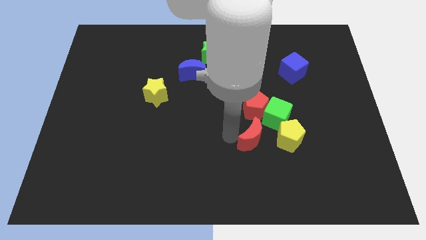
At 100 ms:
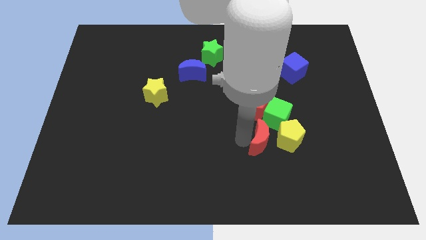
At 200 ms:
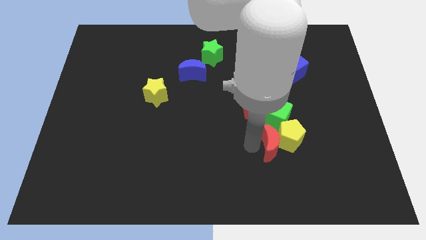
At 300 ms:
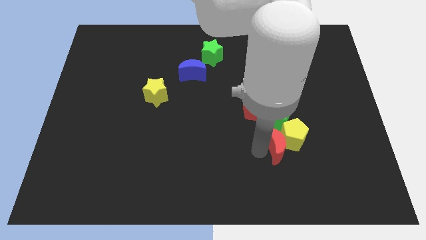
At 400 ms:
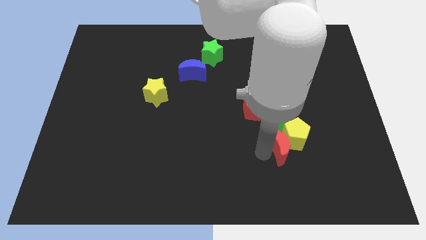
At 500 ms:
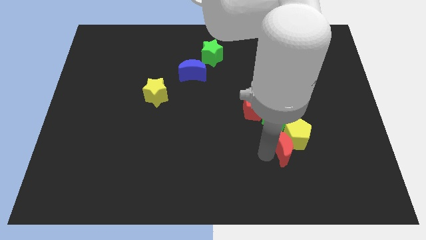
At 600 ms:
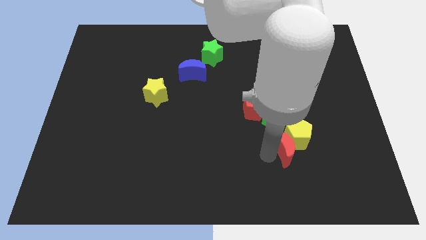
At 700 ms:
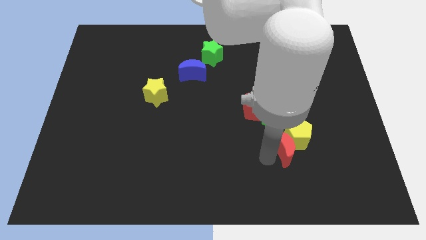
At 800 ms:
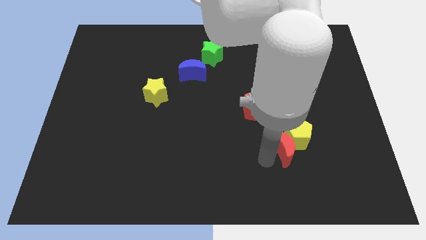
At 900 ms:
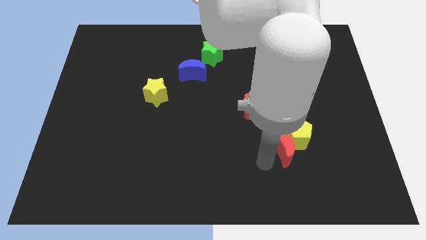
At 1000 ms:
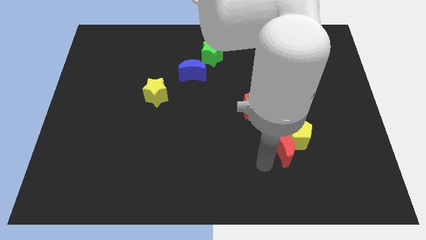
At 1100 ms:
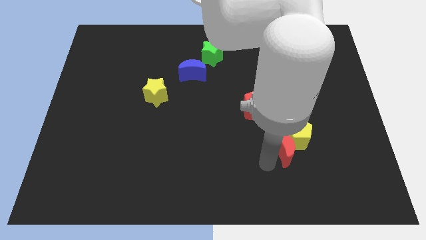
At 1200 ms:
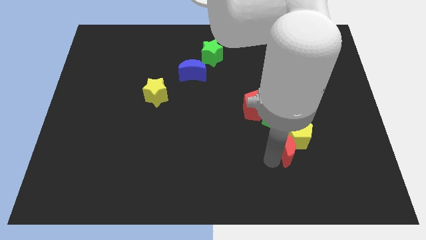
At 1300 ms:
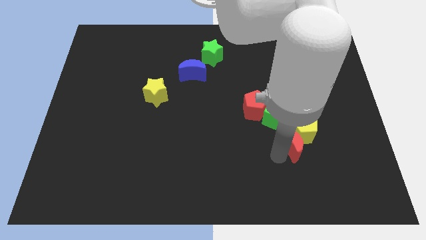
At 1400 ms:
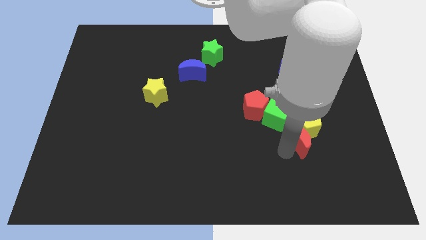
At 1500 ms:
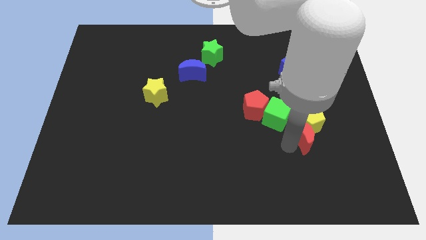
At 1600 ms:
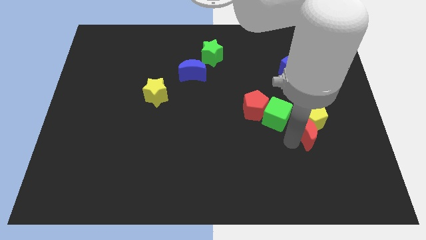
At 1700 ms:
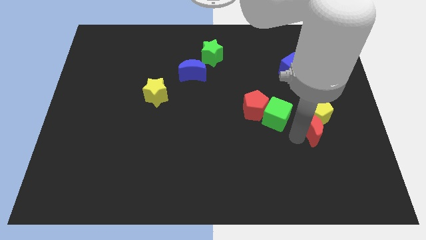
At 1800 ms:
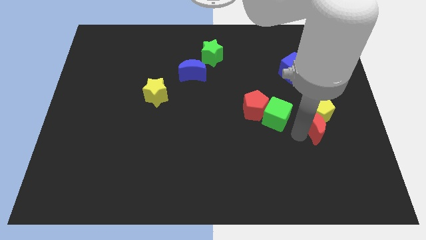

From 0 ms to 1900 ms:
push the yellow pentagon with the help of the red crescent towards the right center of the board

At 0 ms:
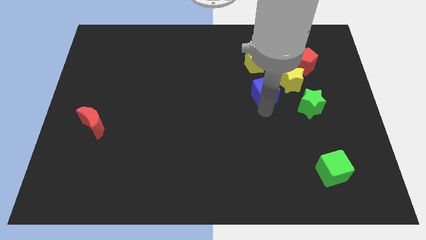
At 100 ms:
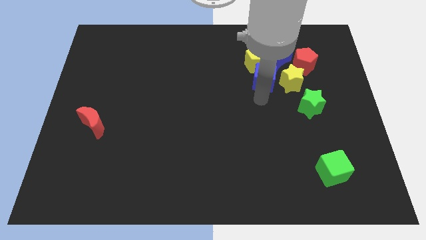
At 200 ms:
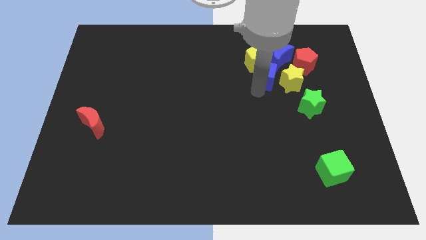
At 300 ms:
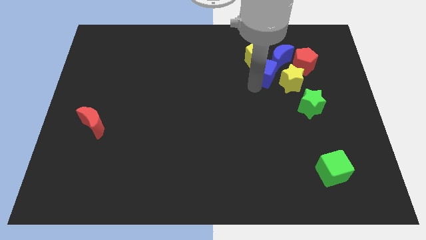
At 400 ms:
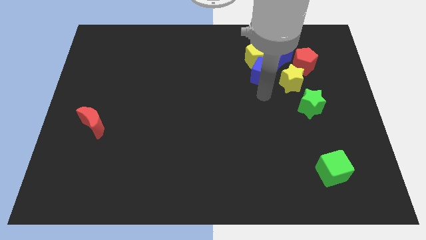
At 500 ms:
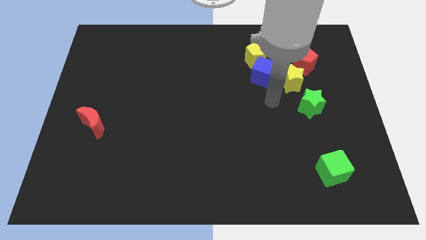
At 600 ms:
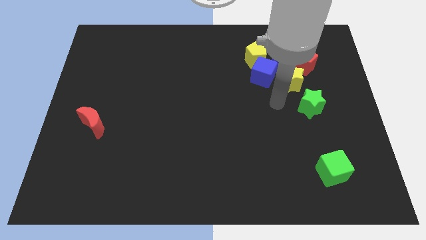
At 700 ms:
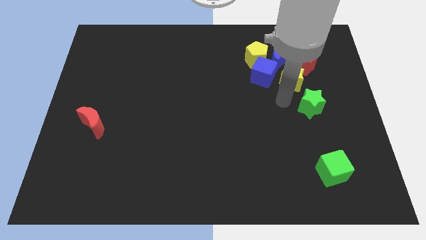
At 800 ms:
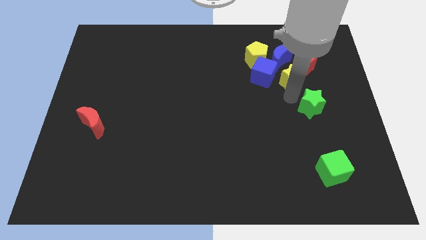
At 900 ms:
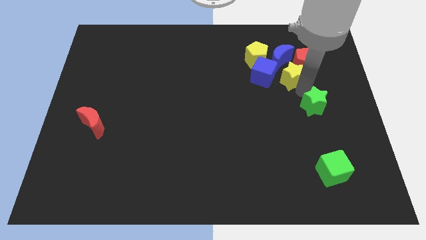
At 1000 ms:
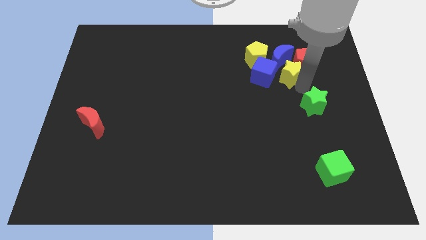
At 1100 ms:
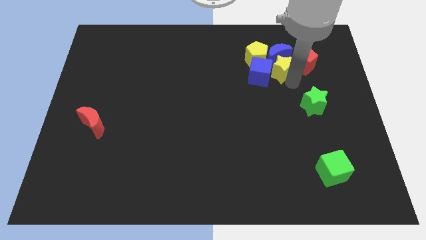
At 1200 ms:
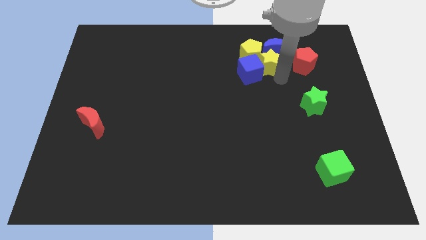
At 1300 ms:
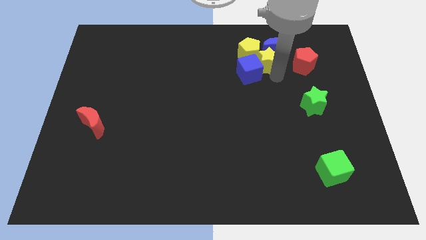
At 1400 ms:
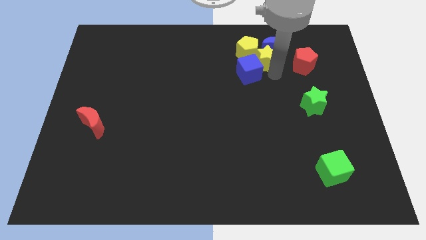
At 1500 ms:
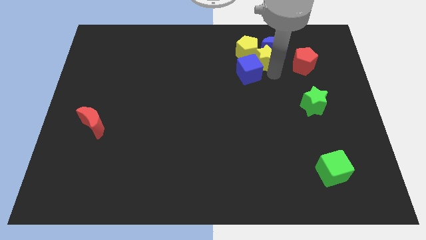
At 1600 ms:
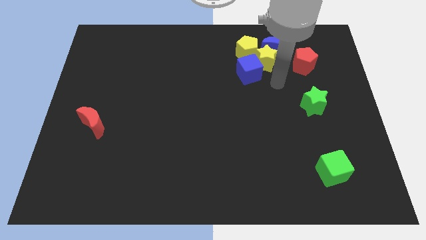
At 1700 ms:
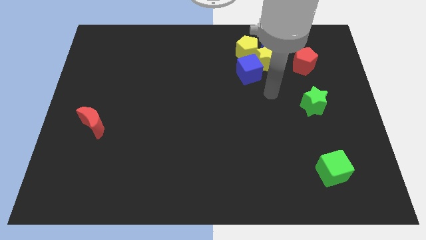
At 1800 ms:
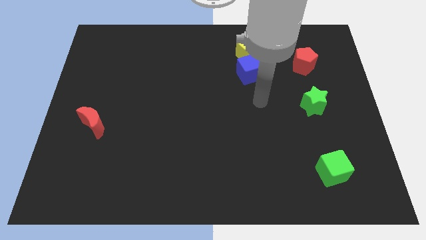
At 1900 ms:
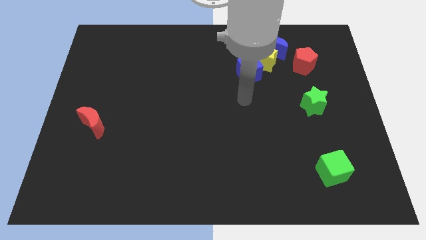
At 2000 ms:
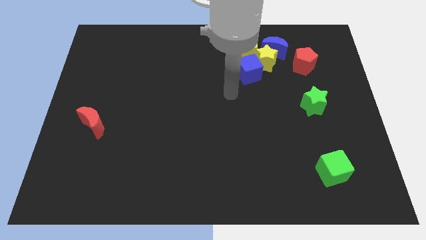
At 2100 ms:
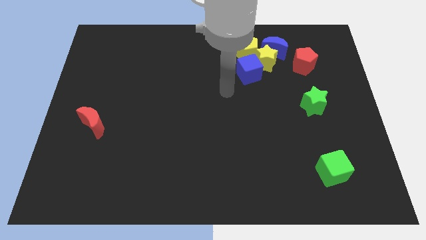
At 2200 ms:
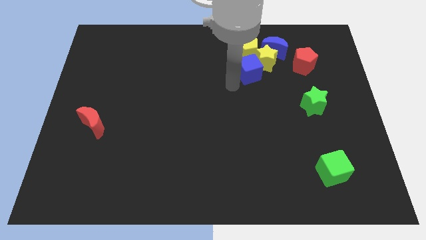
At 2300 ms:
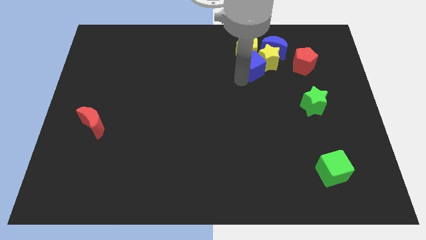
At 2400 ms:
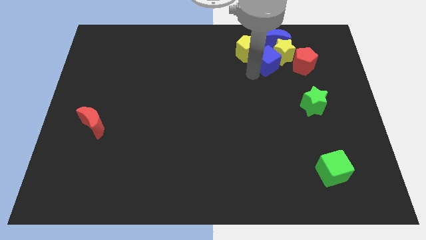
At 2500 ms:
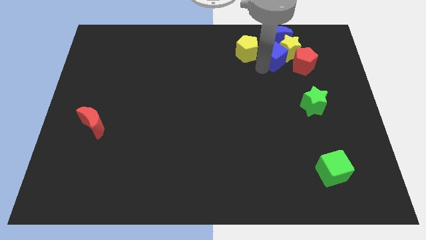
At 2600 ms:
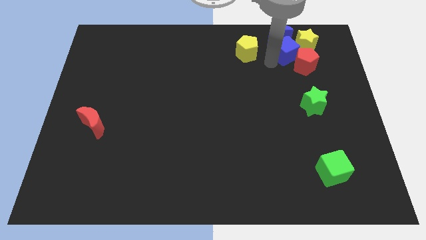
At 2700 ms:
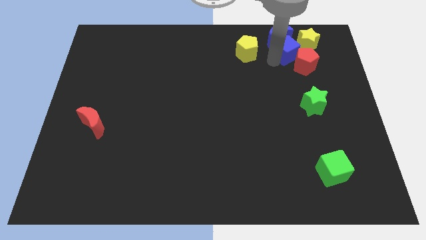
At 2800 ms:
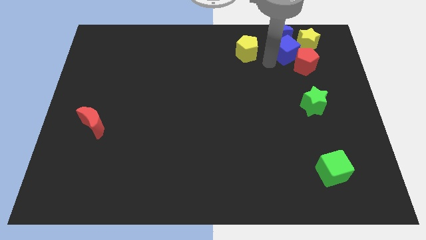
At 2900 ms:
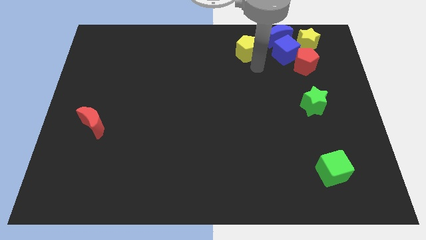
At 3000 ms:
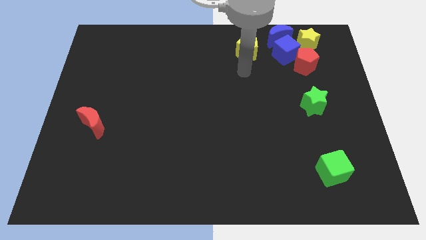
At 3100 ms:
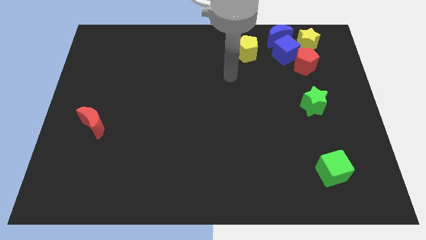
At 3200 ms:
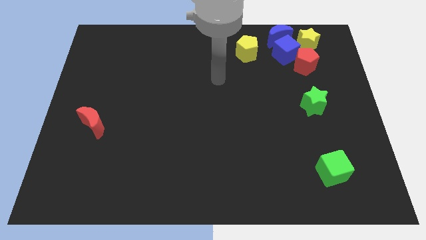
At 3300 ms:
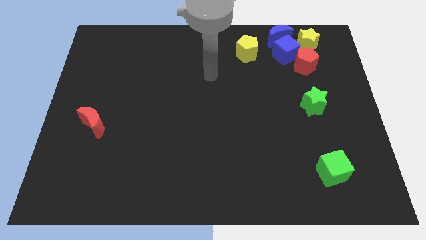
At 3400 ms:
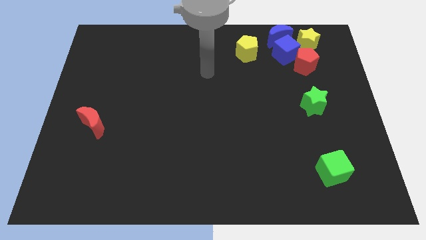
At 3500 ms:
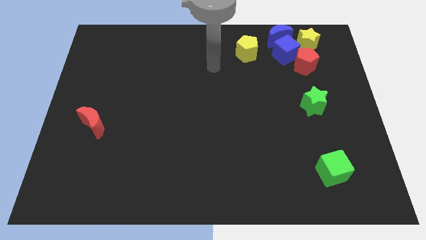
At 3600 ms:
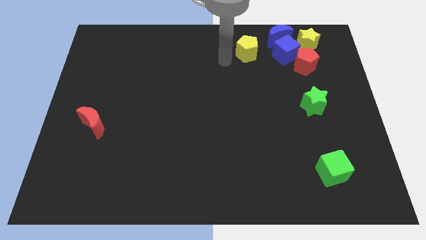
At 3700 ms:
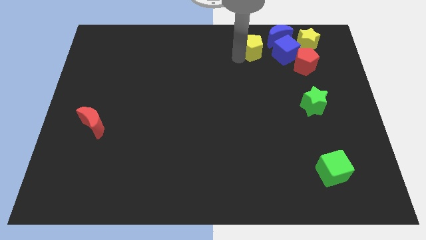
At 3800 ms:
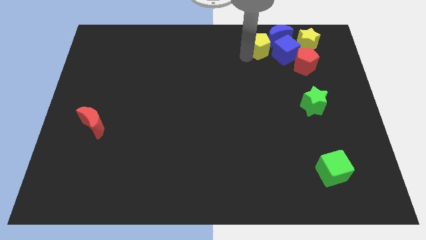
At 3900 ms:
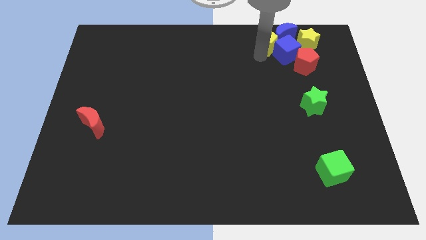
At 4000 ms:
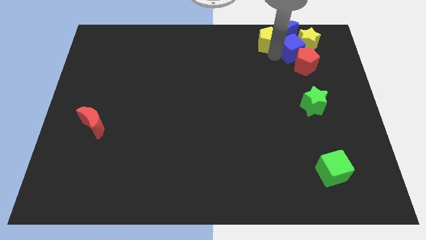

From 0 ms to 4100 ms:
move the yellow star above the red pentagon

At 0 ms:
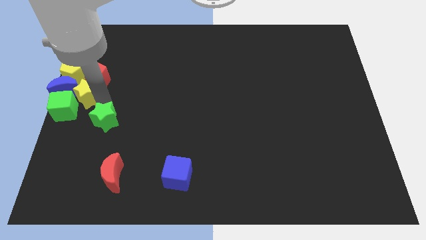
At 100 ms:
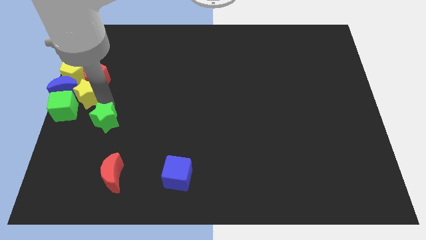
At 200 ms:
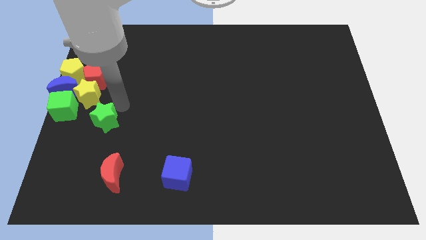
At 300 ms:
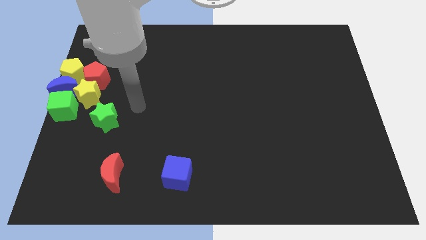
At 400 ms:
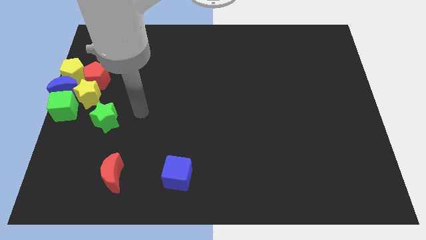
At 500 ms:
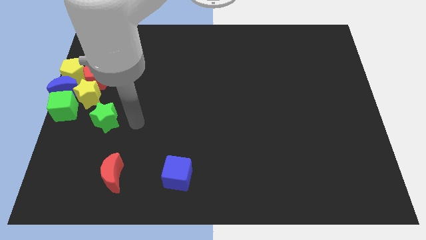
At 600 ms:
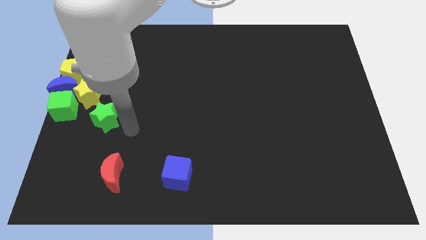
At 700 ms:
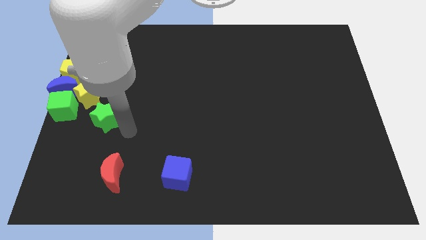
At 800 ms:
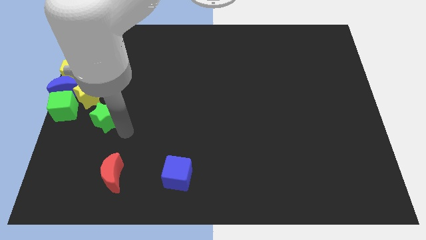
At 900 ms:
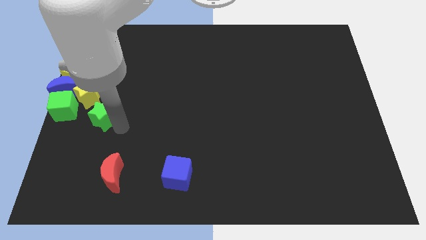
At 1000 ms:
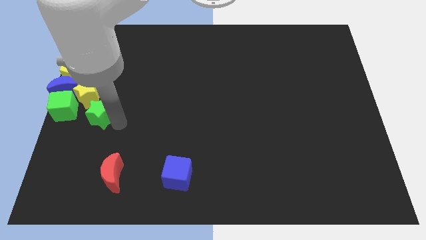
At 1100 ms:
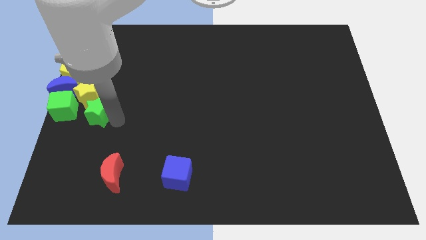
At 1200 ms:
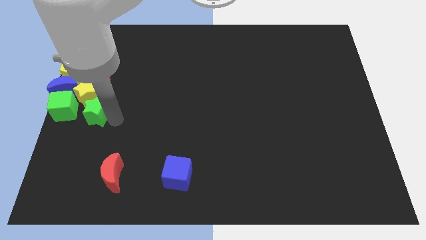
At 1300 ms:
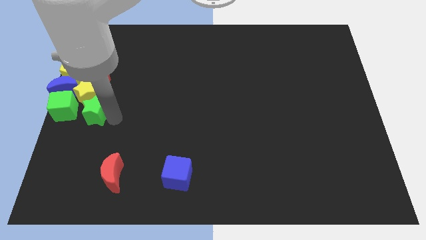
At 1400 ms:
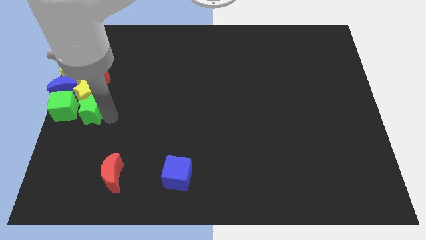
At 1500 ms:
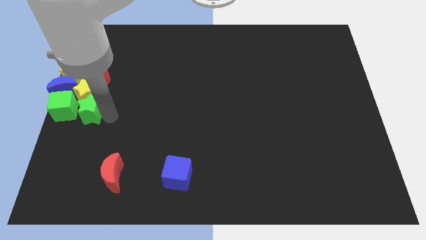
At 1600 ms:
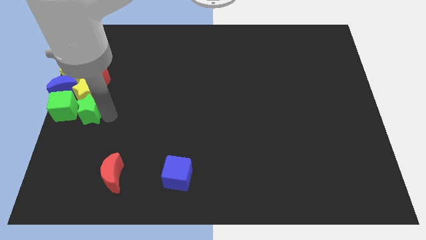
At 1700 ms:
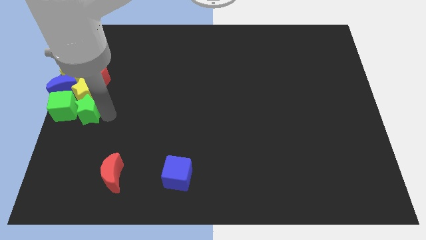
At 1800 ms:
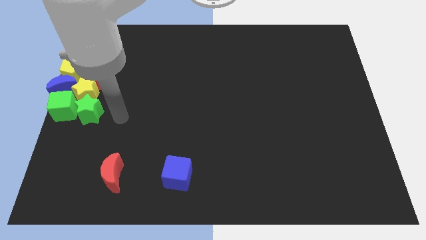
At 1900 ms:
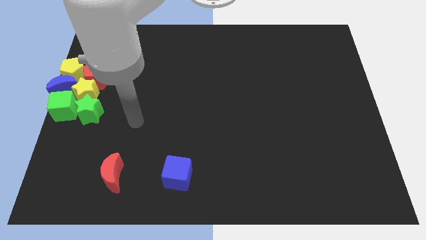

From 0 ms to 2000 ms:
push the green star into the yellow star

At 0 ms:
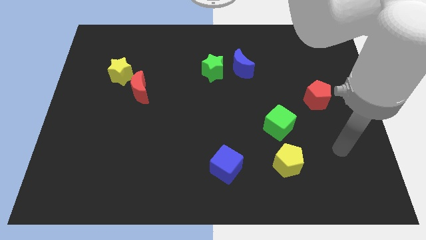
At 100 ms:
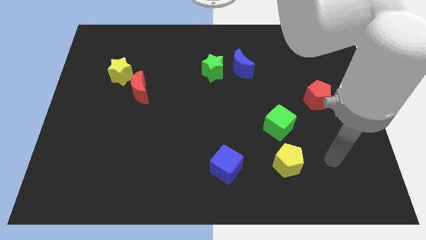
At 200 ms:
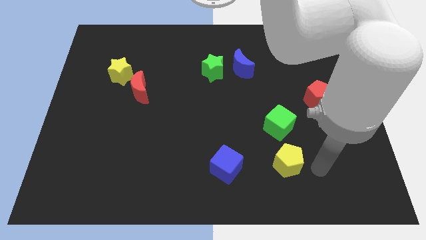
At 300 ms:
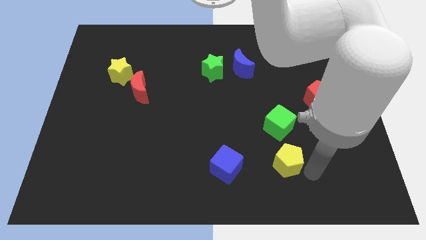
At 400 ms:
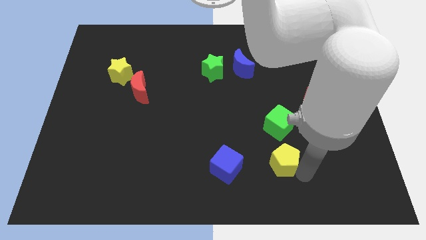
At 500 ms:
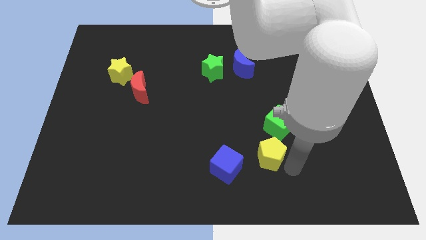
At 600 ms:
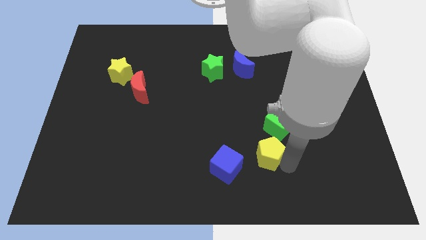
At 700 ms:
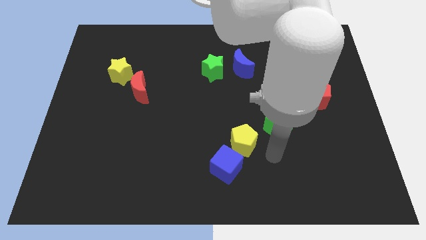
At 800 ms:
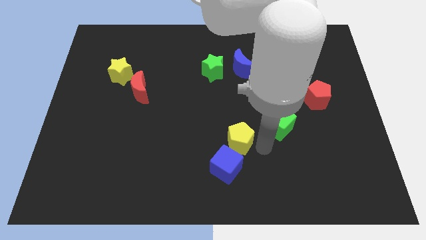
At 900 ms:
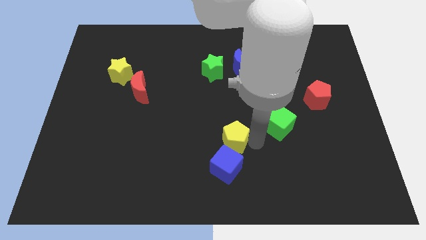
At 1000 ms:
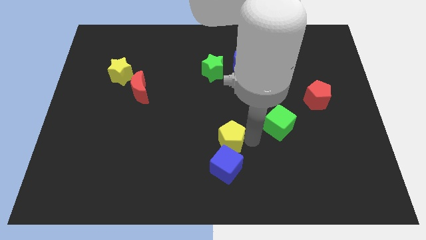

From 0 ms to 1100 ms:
push the yellow pentagon to the left
